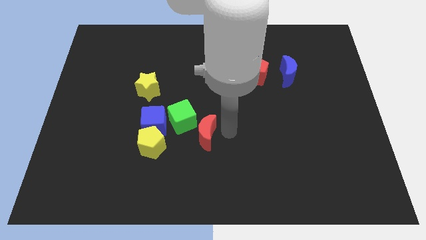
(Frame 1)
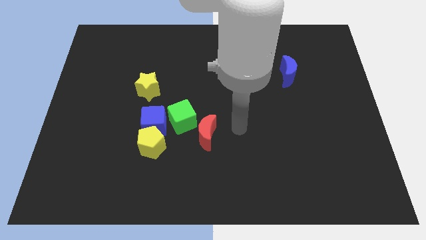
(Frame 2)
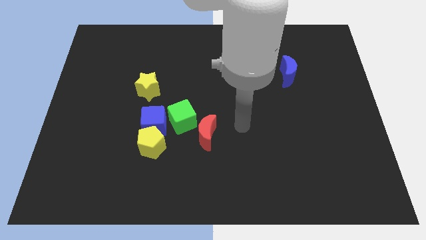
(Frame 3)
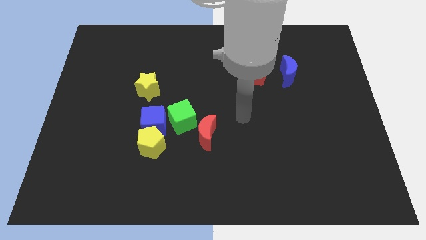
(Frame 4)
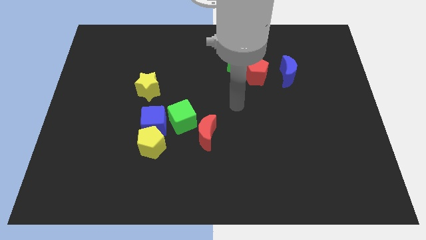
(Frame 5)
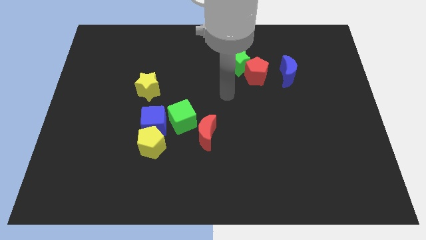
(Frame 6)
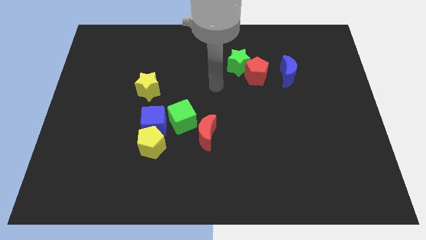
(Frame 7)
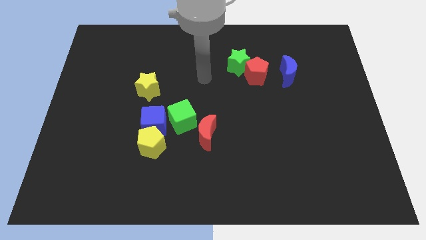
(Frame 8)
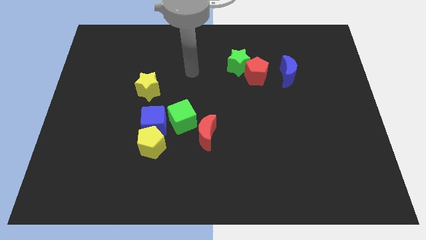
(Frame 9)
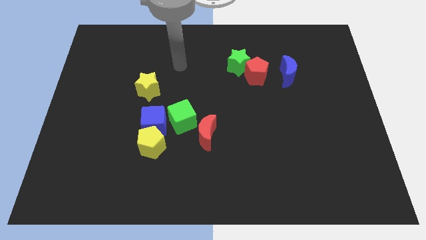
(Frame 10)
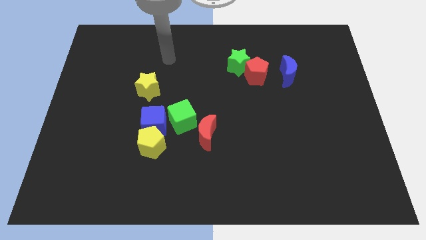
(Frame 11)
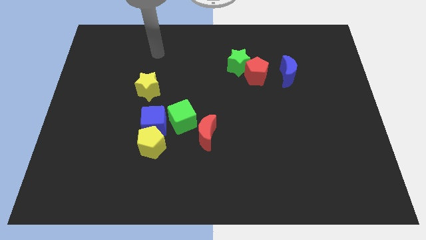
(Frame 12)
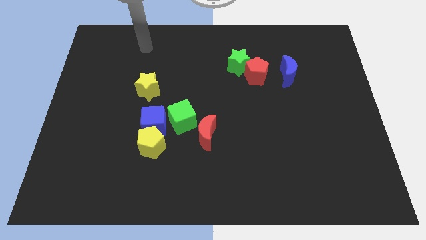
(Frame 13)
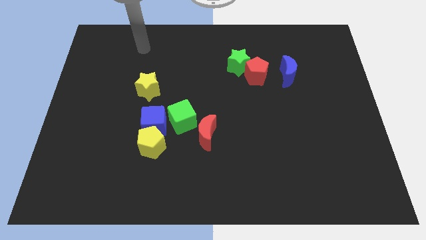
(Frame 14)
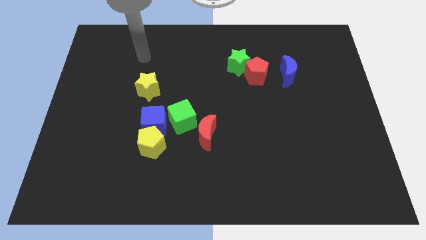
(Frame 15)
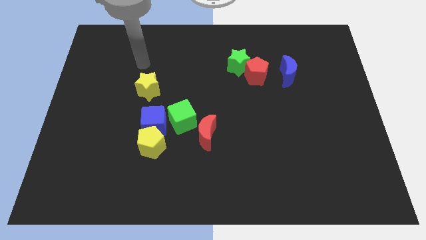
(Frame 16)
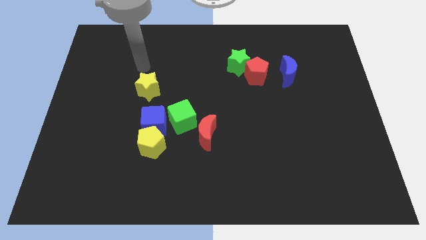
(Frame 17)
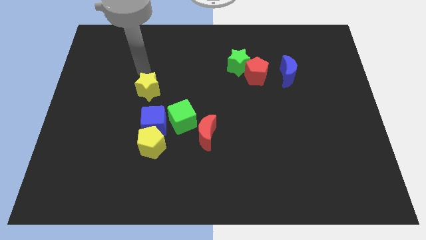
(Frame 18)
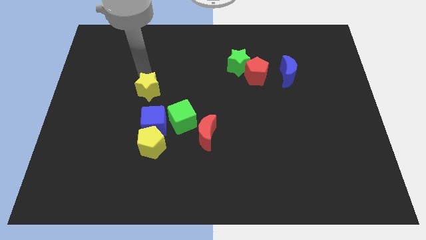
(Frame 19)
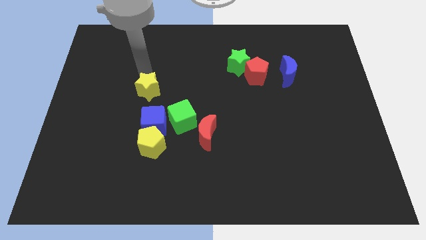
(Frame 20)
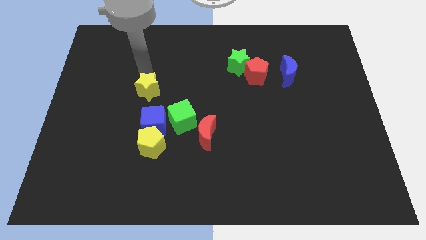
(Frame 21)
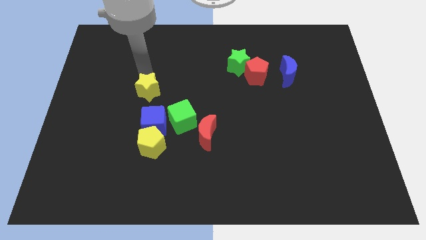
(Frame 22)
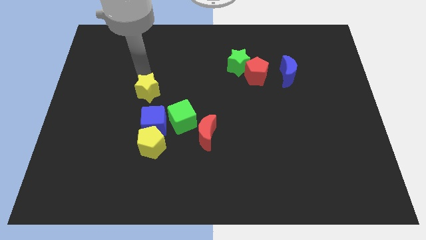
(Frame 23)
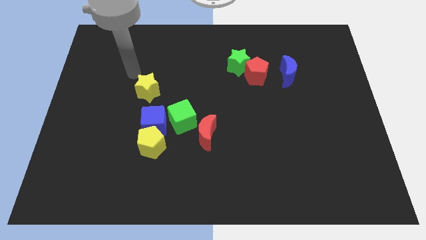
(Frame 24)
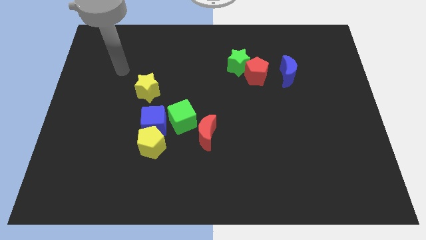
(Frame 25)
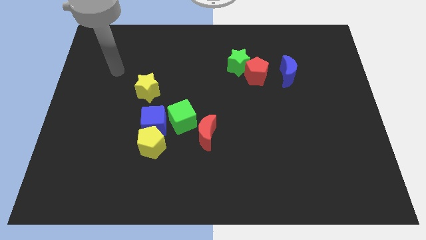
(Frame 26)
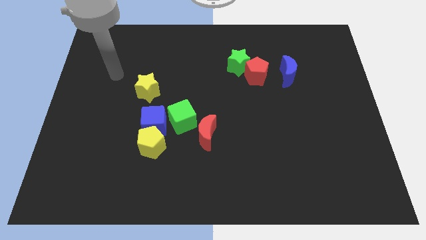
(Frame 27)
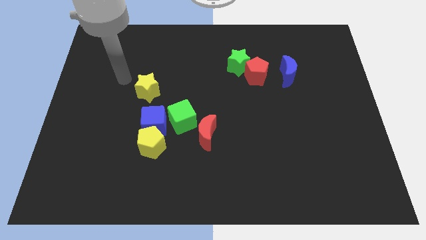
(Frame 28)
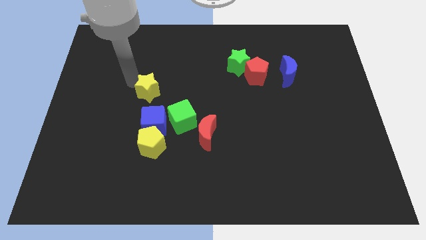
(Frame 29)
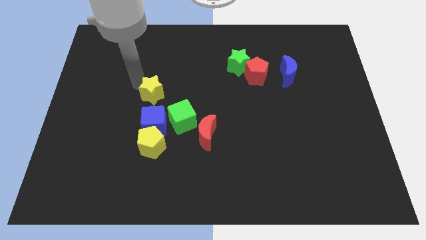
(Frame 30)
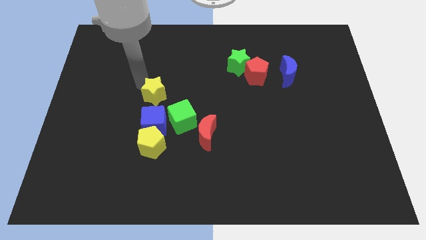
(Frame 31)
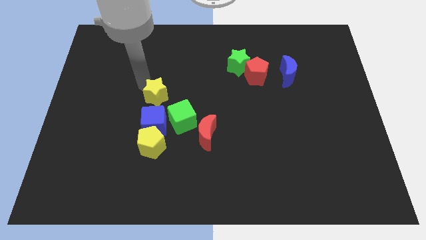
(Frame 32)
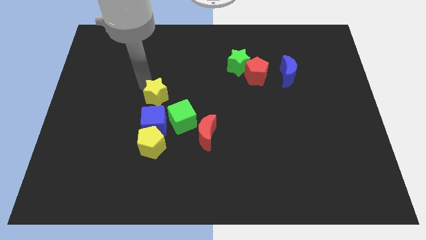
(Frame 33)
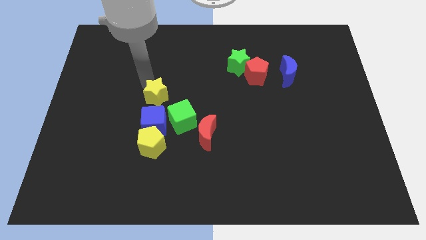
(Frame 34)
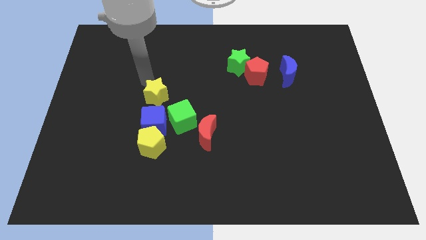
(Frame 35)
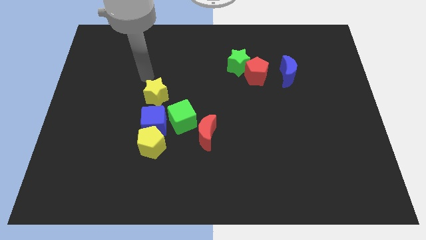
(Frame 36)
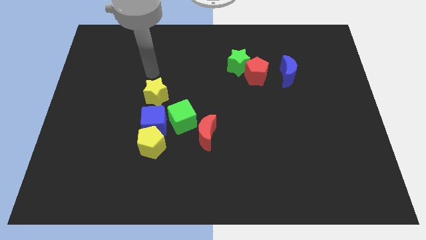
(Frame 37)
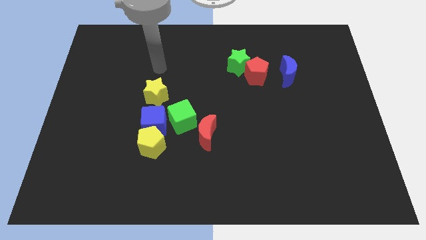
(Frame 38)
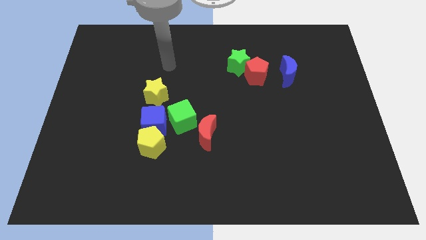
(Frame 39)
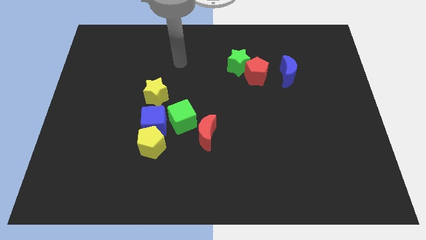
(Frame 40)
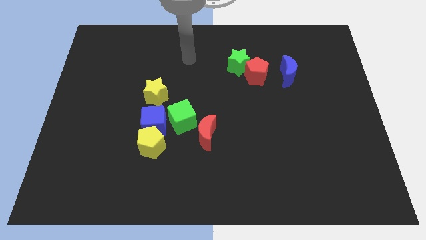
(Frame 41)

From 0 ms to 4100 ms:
place yellow star on top of blue cube

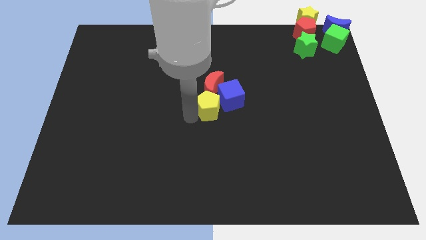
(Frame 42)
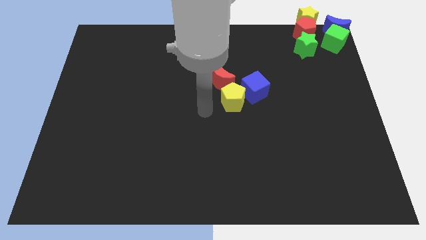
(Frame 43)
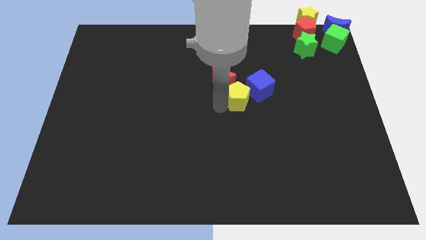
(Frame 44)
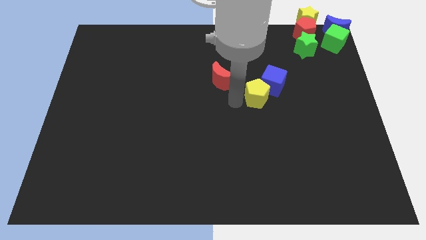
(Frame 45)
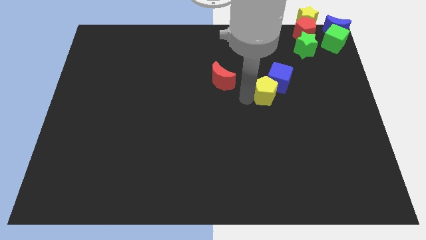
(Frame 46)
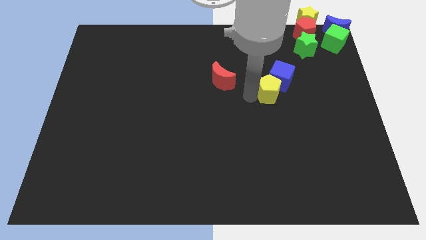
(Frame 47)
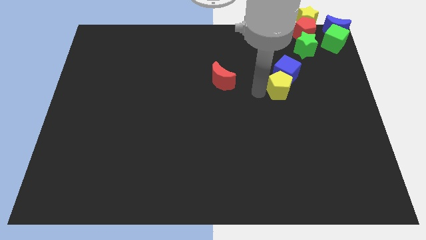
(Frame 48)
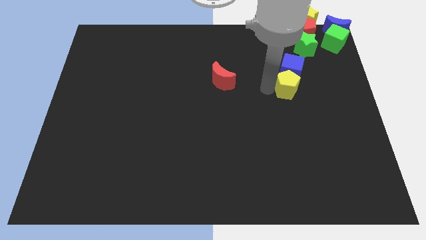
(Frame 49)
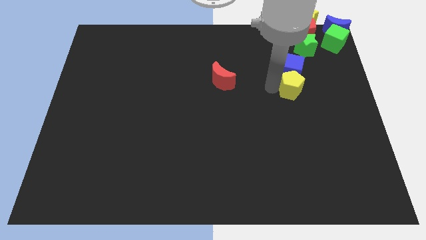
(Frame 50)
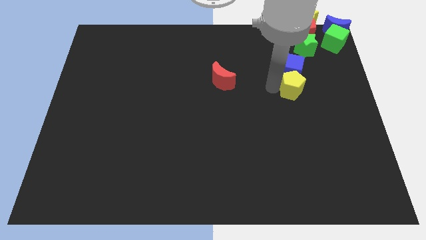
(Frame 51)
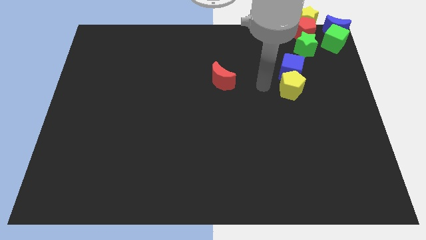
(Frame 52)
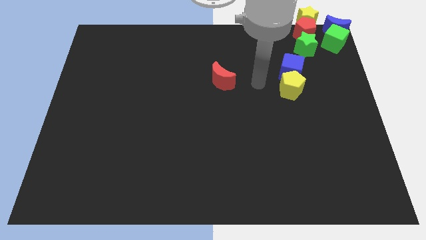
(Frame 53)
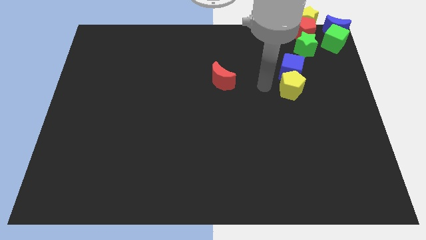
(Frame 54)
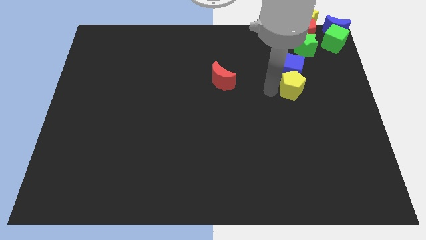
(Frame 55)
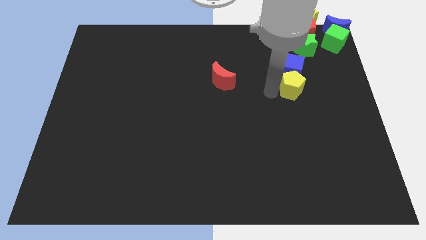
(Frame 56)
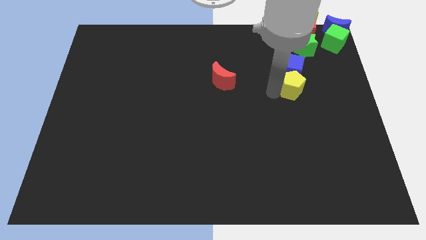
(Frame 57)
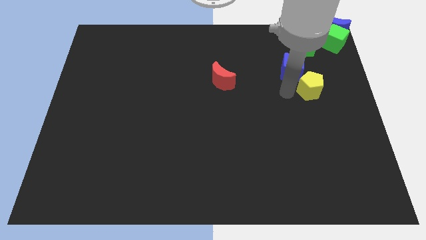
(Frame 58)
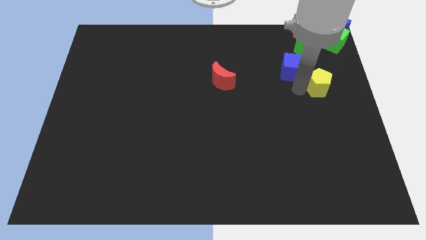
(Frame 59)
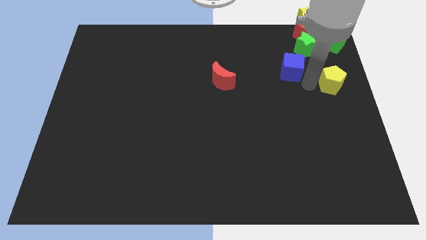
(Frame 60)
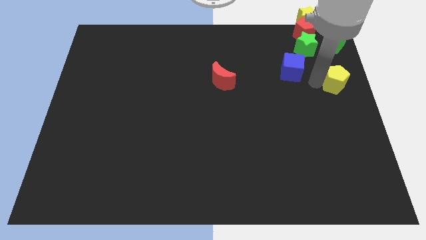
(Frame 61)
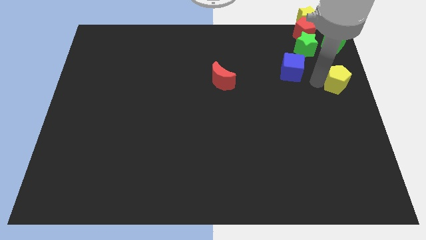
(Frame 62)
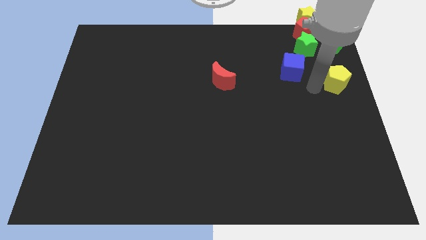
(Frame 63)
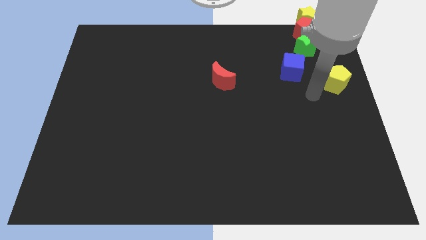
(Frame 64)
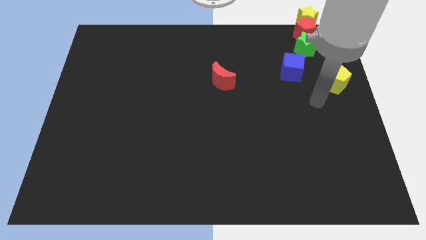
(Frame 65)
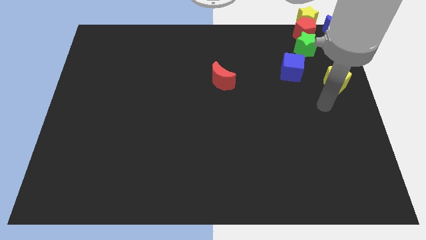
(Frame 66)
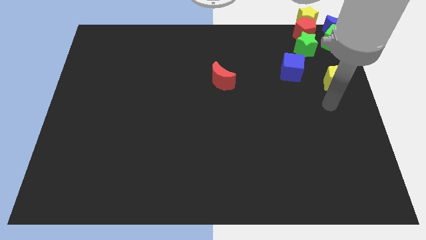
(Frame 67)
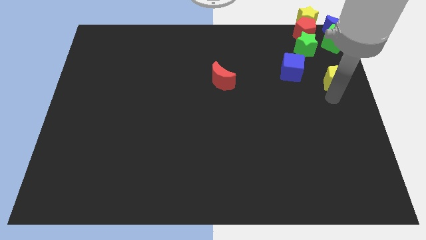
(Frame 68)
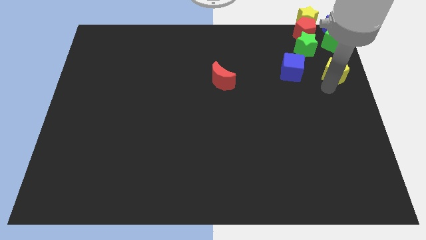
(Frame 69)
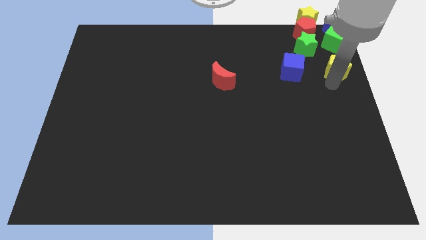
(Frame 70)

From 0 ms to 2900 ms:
place the yellow pentagon right to the blue cube

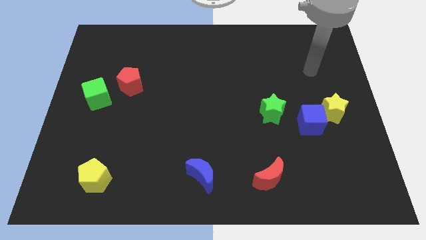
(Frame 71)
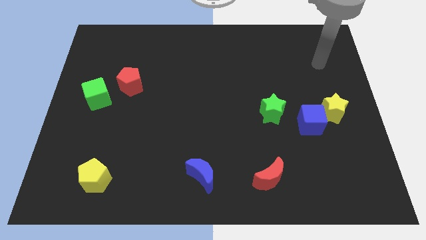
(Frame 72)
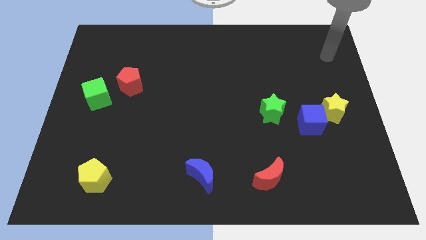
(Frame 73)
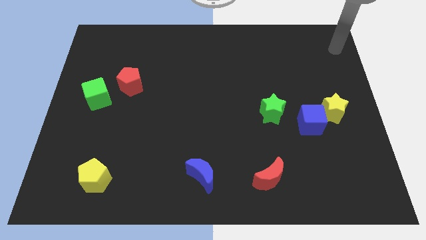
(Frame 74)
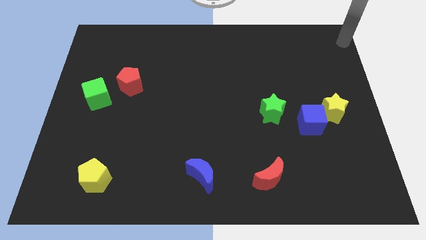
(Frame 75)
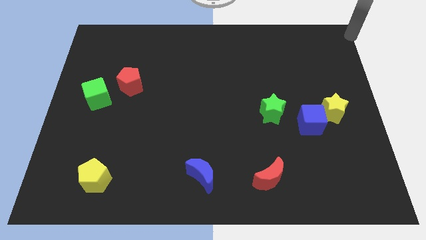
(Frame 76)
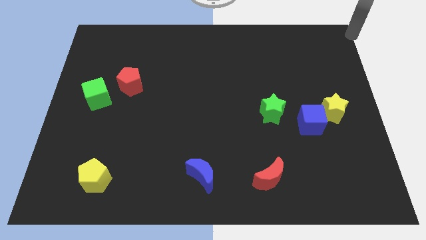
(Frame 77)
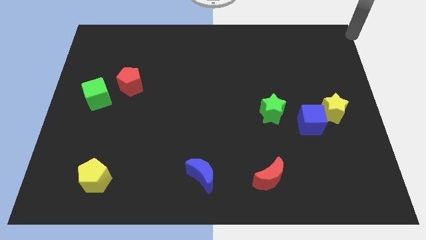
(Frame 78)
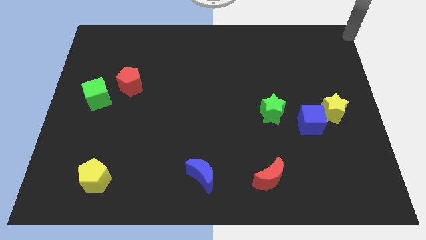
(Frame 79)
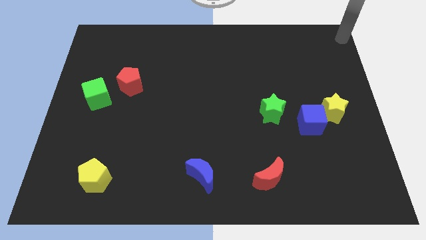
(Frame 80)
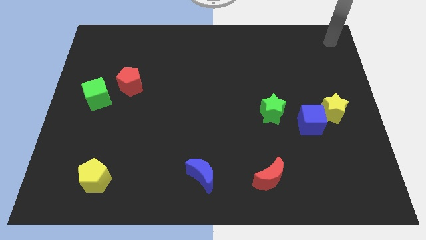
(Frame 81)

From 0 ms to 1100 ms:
place your arm on top right corner

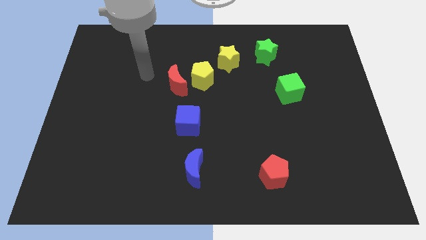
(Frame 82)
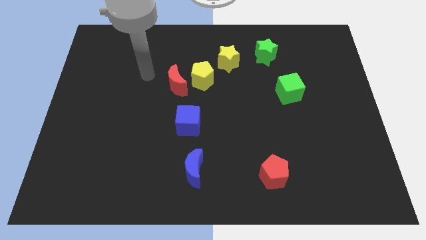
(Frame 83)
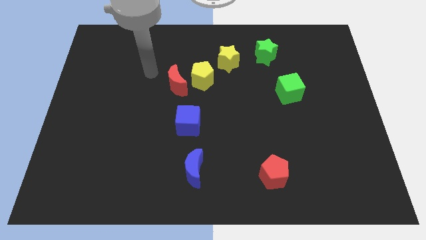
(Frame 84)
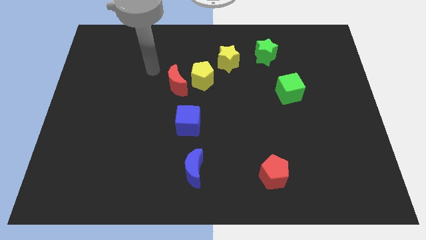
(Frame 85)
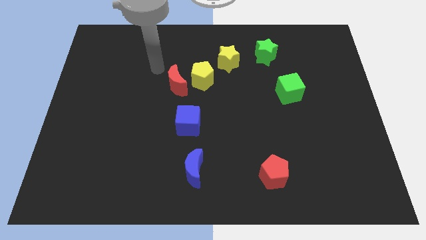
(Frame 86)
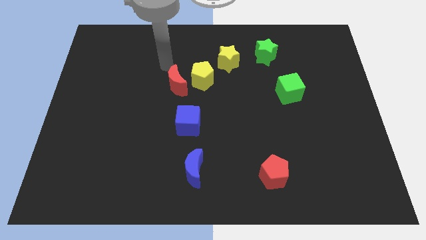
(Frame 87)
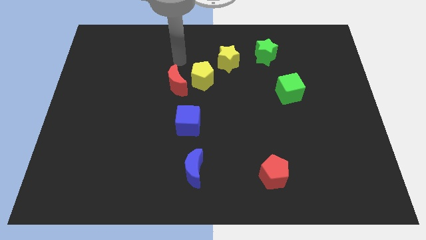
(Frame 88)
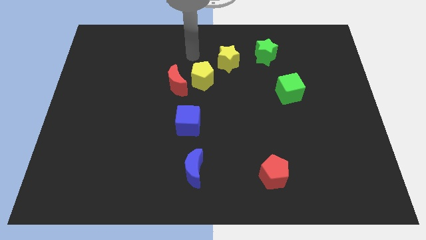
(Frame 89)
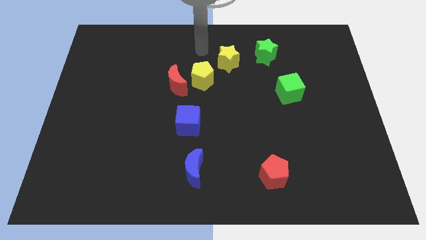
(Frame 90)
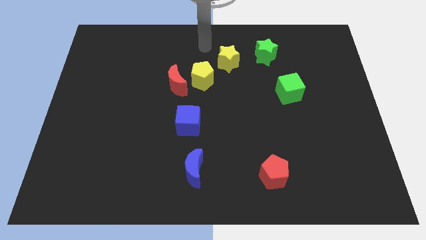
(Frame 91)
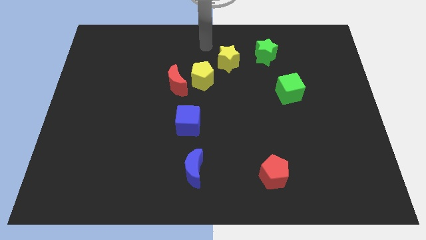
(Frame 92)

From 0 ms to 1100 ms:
move your hand towards the top center

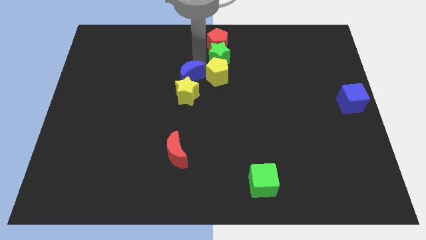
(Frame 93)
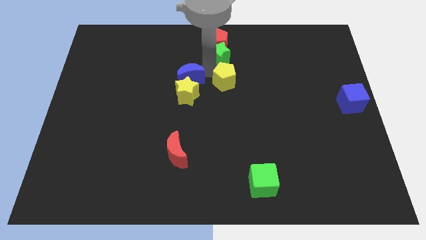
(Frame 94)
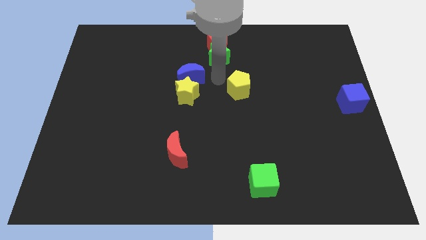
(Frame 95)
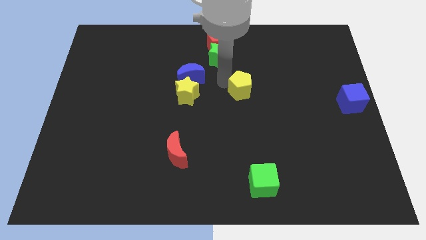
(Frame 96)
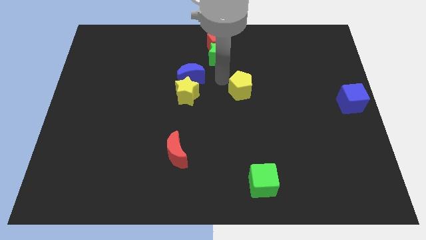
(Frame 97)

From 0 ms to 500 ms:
separate blue crescent and yellow pentagon
